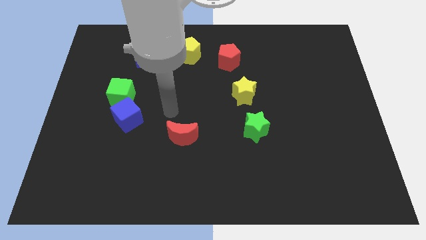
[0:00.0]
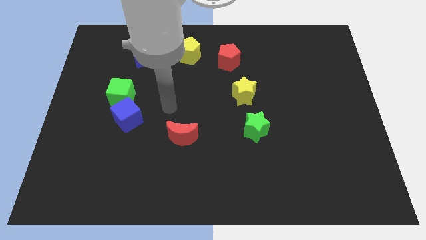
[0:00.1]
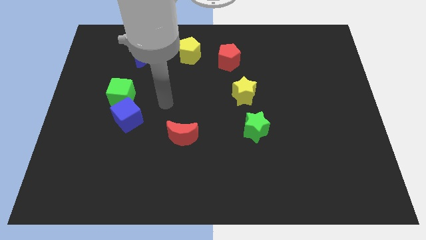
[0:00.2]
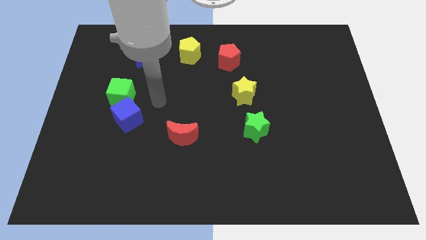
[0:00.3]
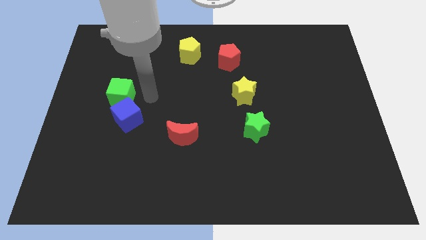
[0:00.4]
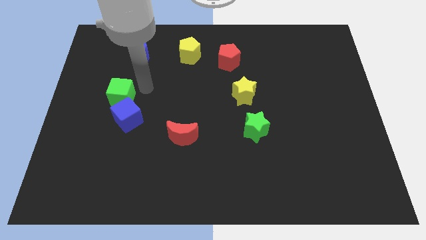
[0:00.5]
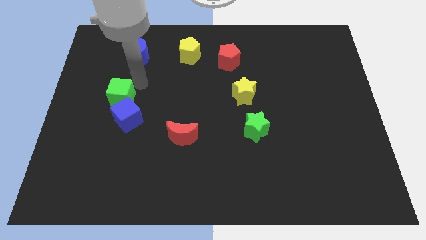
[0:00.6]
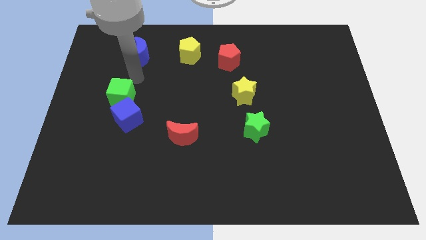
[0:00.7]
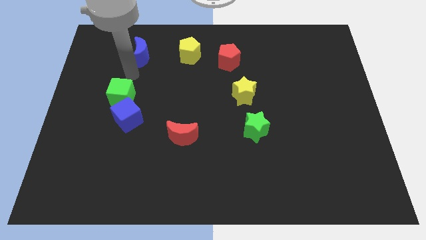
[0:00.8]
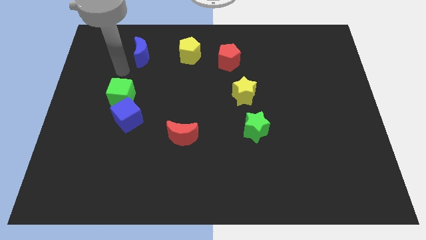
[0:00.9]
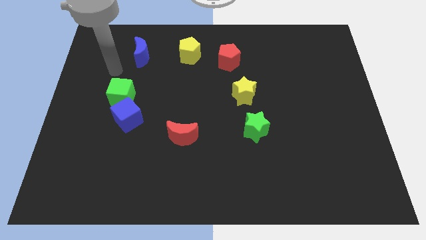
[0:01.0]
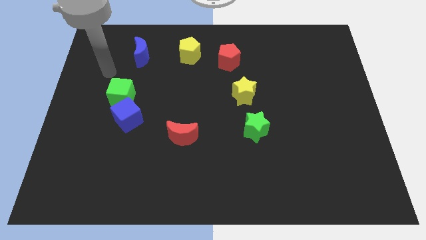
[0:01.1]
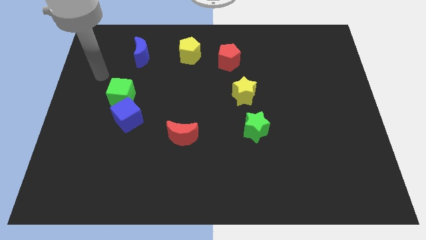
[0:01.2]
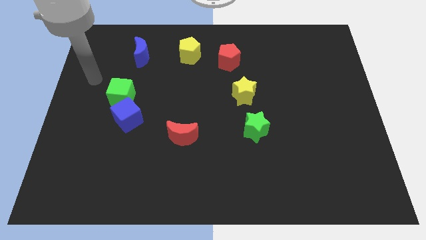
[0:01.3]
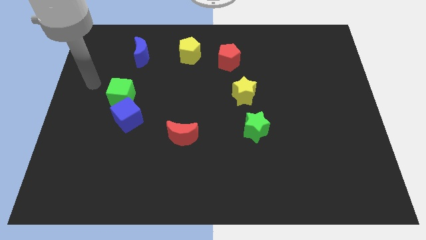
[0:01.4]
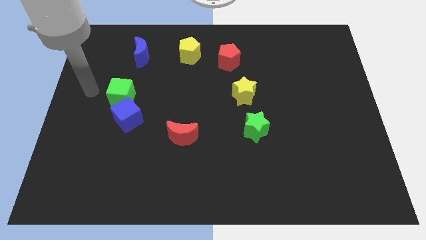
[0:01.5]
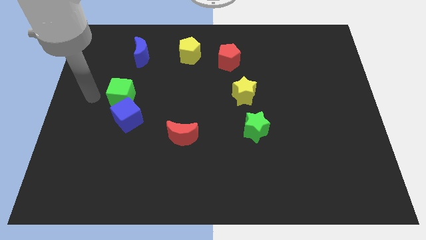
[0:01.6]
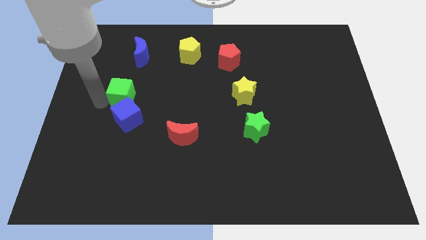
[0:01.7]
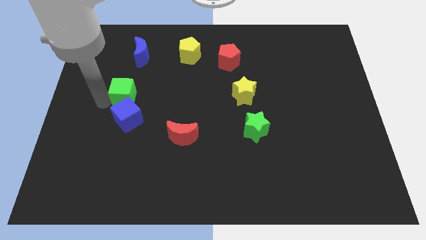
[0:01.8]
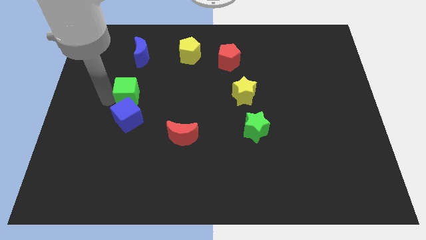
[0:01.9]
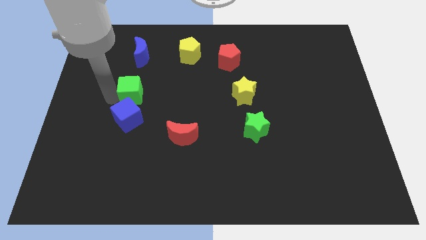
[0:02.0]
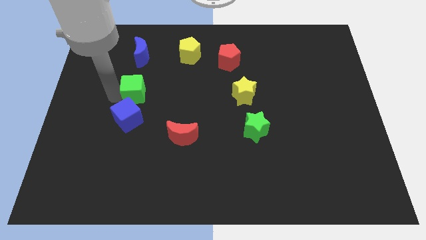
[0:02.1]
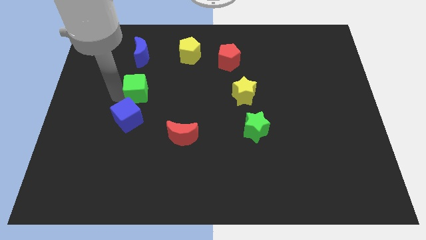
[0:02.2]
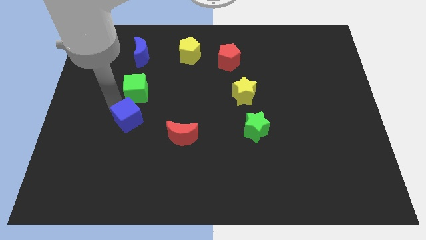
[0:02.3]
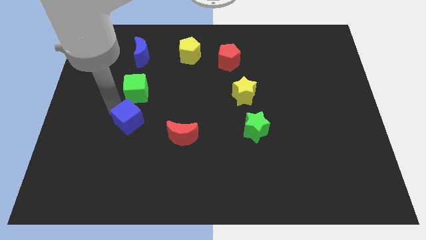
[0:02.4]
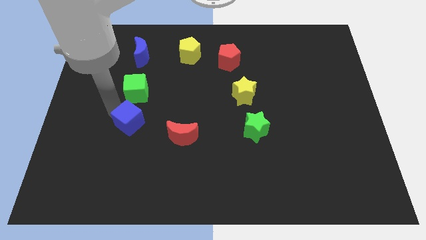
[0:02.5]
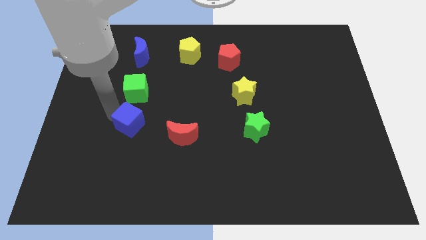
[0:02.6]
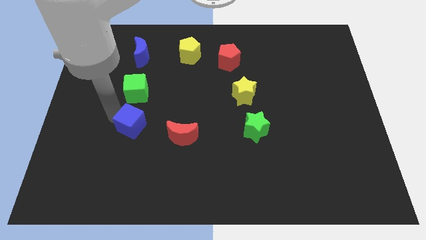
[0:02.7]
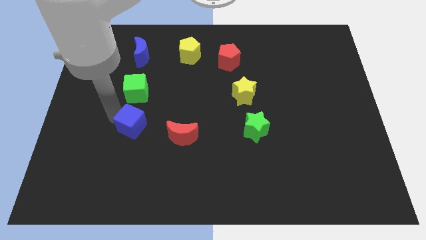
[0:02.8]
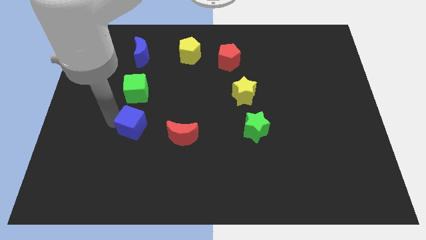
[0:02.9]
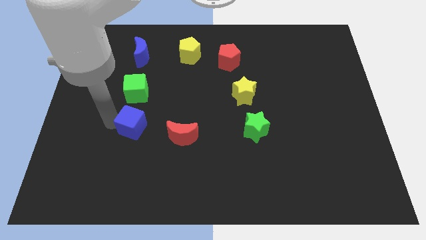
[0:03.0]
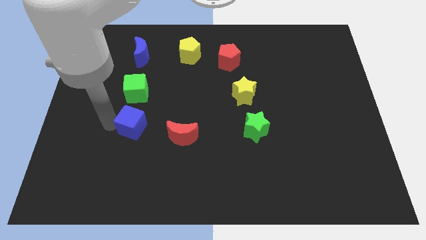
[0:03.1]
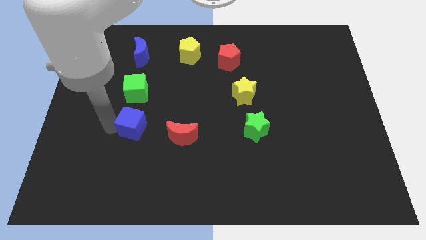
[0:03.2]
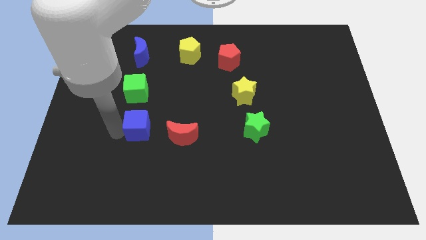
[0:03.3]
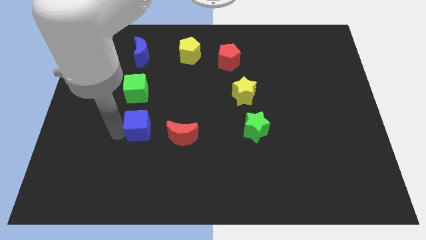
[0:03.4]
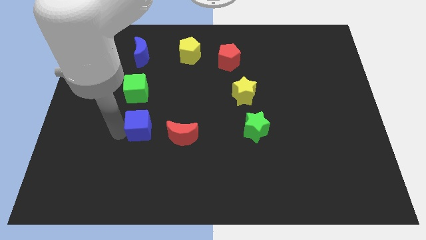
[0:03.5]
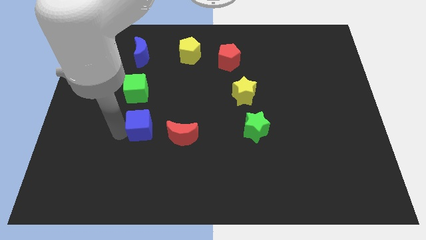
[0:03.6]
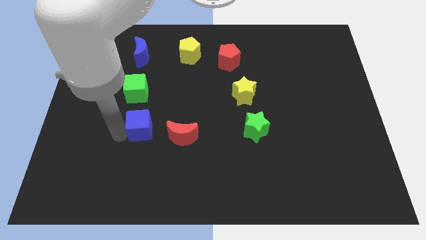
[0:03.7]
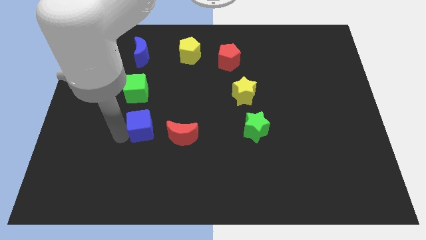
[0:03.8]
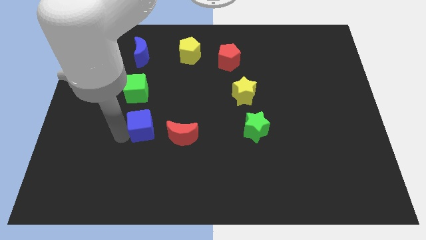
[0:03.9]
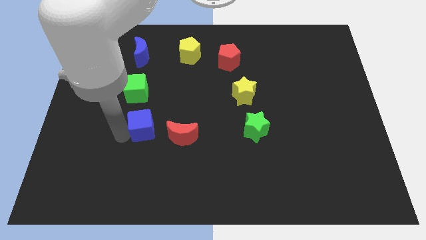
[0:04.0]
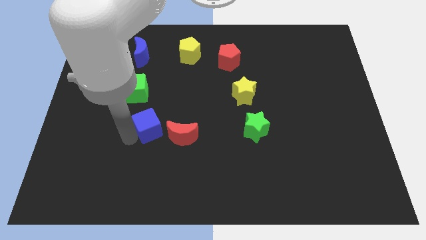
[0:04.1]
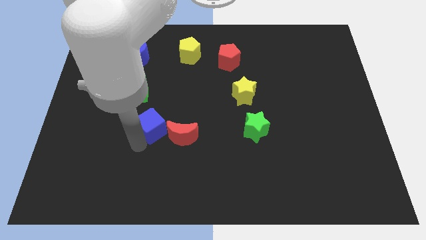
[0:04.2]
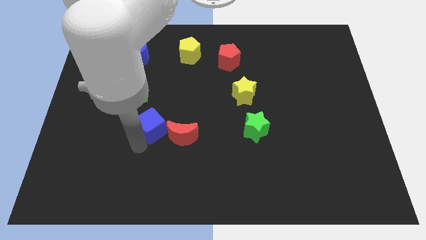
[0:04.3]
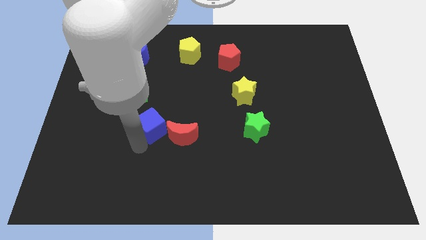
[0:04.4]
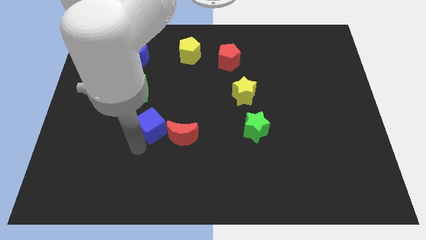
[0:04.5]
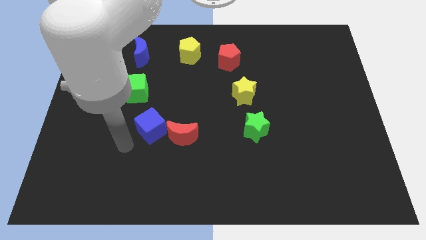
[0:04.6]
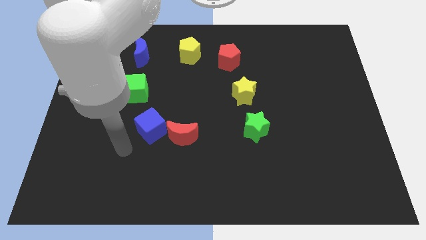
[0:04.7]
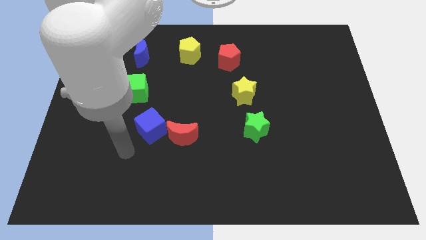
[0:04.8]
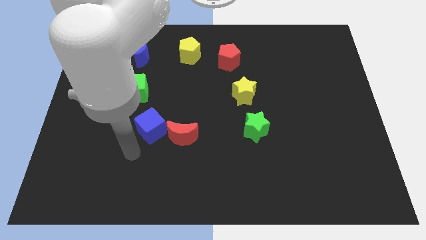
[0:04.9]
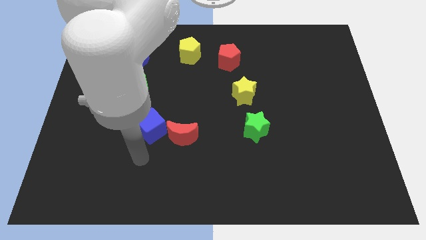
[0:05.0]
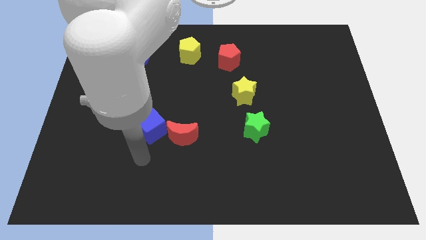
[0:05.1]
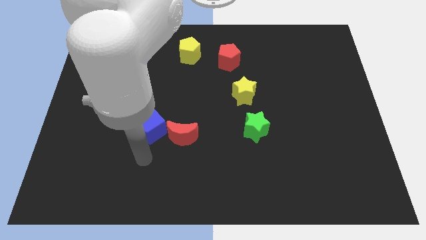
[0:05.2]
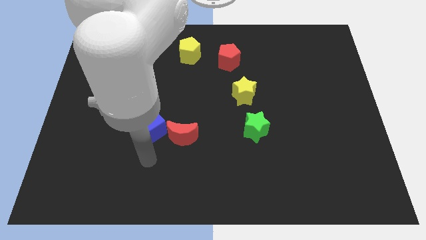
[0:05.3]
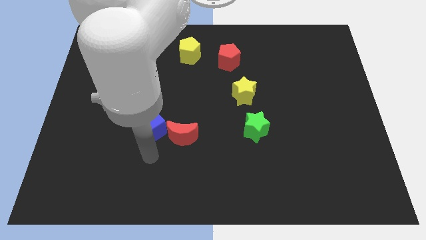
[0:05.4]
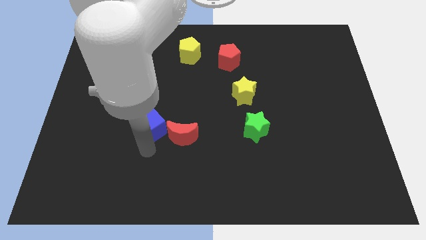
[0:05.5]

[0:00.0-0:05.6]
push the blue cube close to the left of the red crescent

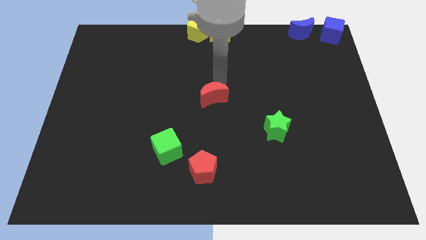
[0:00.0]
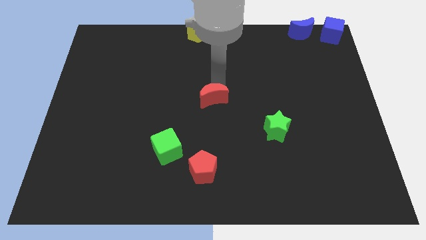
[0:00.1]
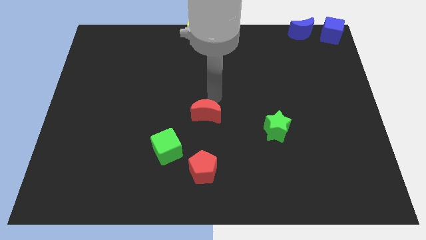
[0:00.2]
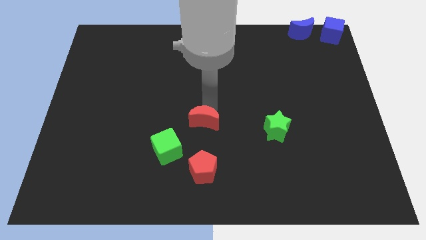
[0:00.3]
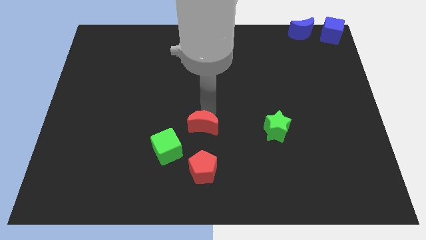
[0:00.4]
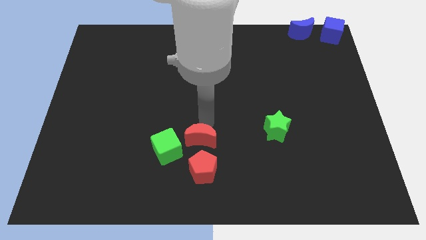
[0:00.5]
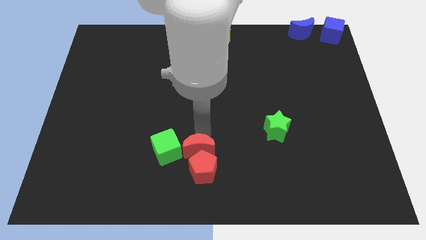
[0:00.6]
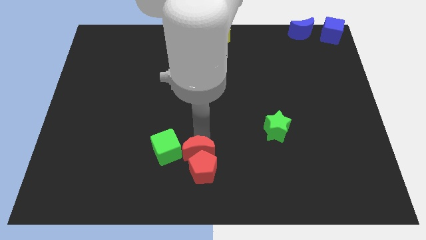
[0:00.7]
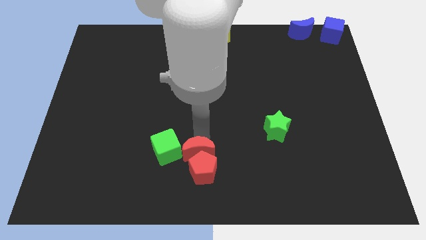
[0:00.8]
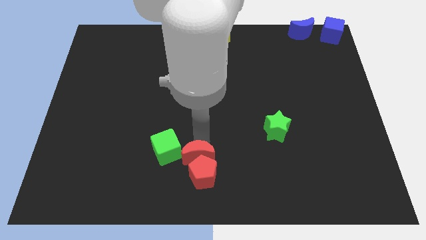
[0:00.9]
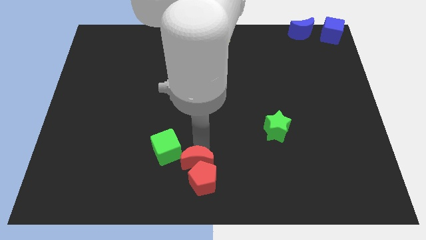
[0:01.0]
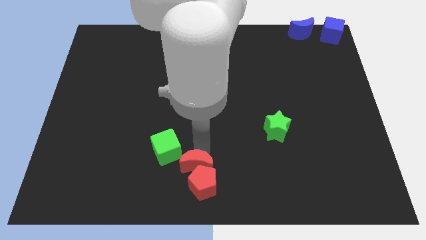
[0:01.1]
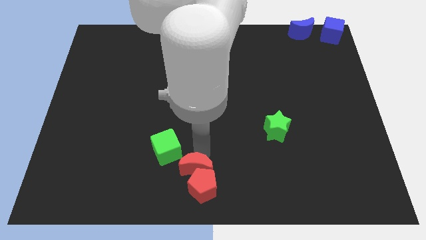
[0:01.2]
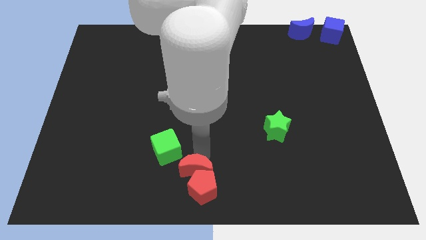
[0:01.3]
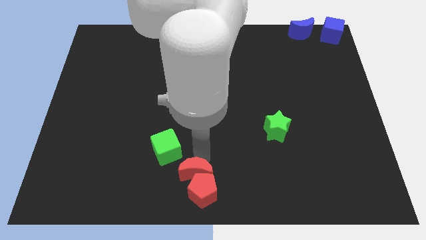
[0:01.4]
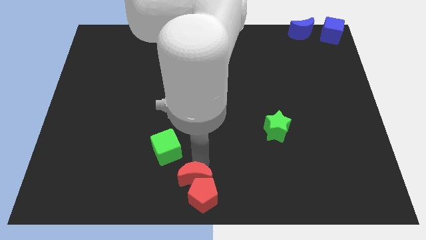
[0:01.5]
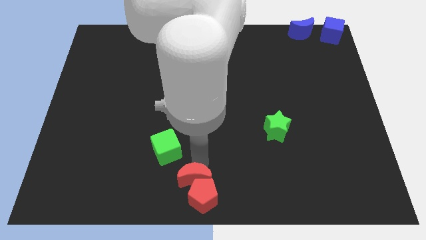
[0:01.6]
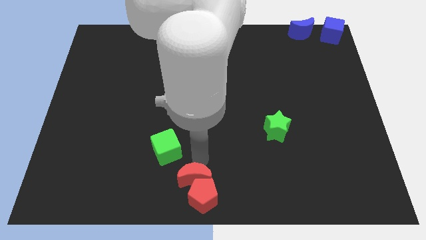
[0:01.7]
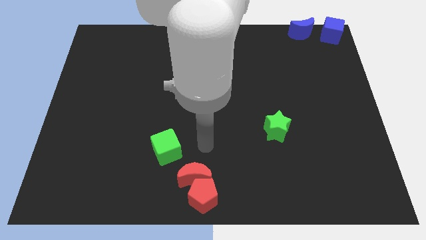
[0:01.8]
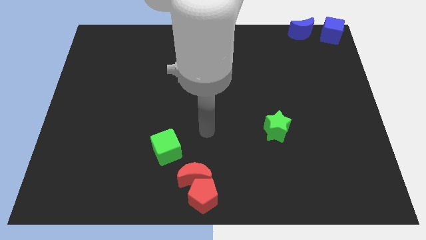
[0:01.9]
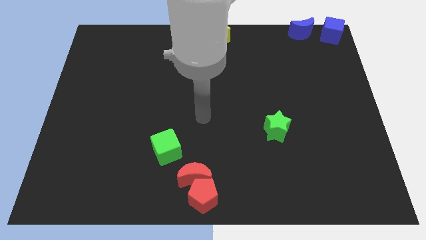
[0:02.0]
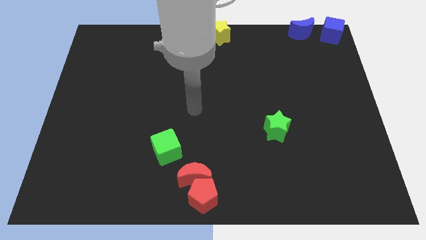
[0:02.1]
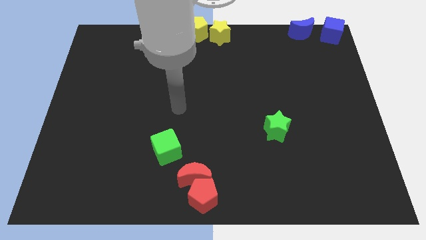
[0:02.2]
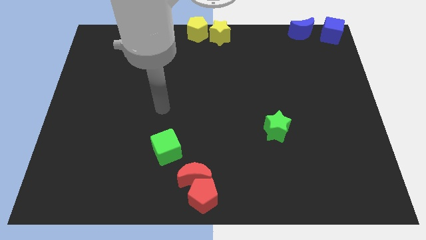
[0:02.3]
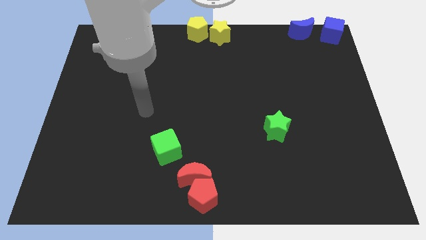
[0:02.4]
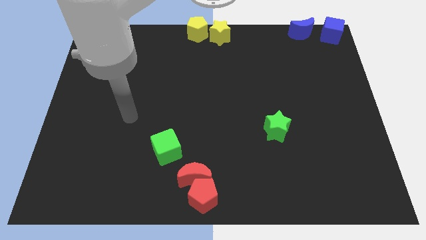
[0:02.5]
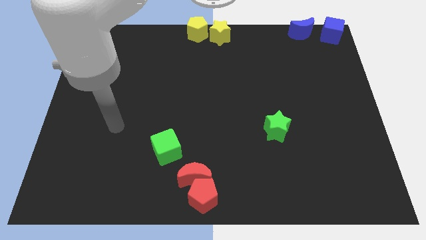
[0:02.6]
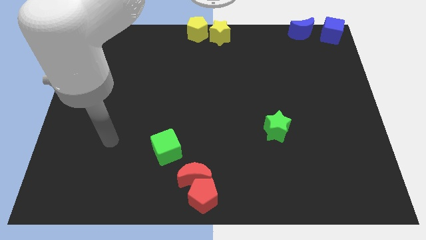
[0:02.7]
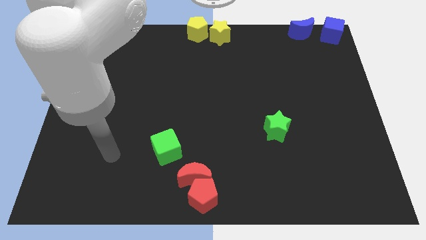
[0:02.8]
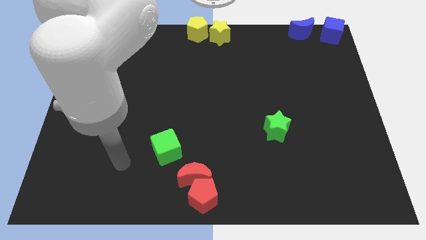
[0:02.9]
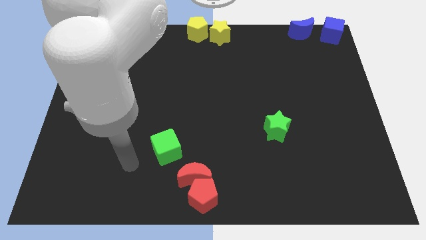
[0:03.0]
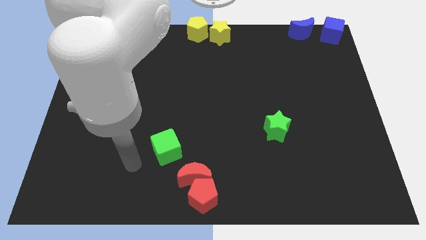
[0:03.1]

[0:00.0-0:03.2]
place red moon on the red pentagon
